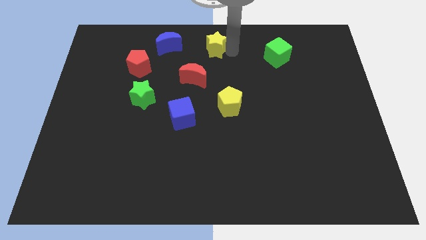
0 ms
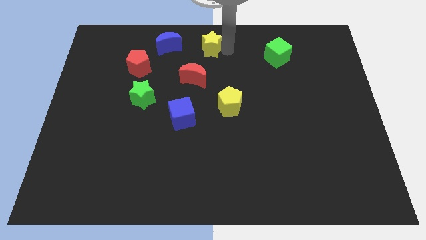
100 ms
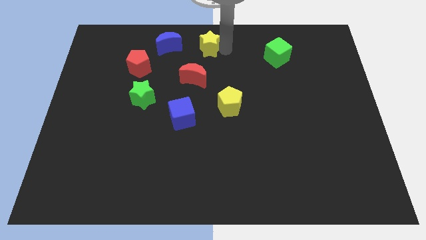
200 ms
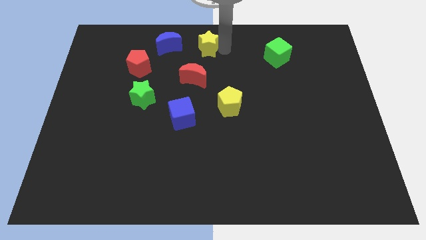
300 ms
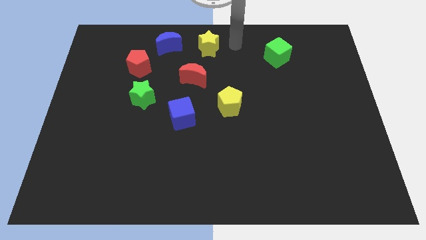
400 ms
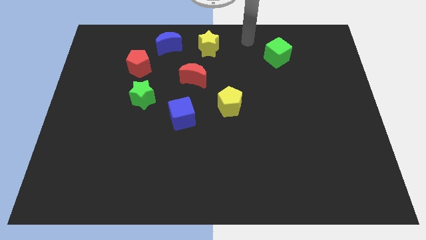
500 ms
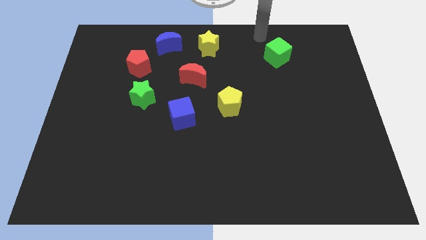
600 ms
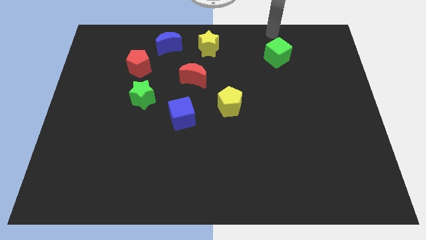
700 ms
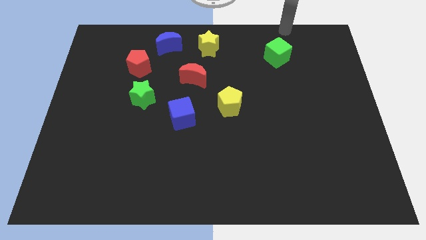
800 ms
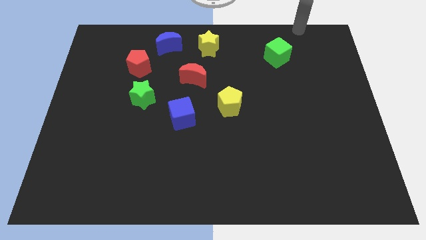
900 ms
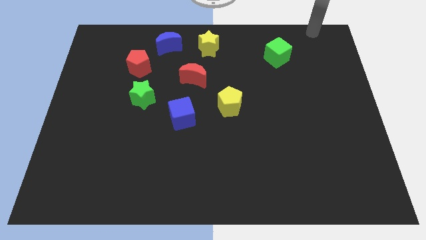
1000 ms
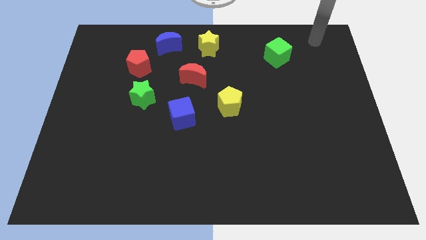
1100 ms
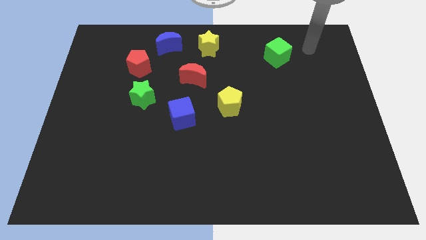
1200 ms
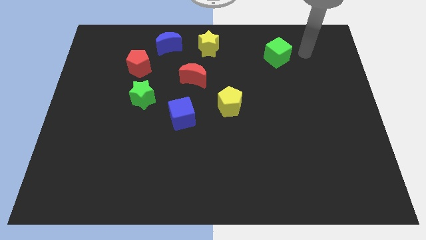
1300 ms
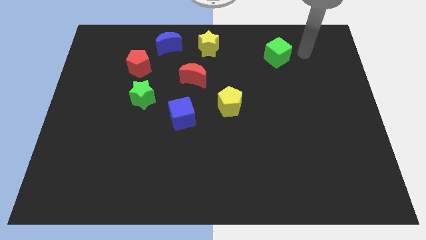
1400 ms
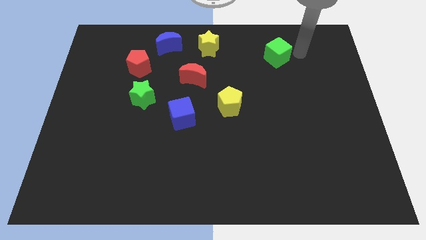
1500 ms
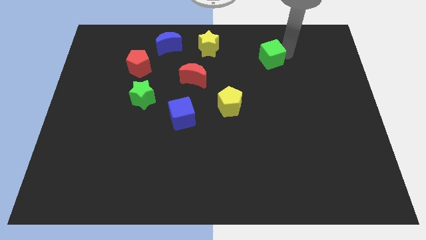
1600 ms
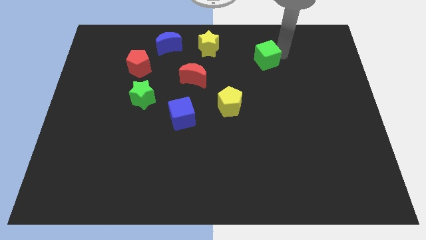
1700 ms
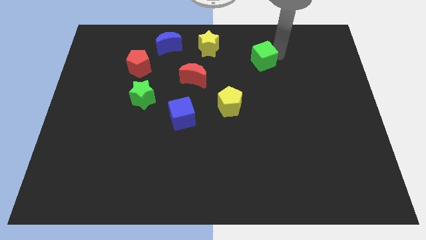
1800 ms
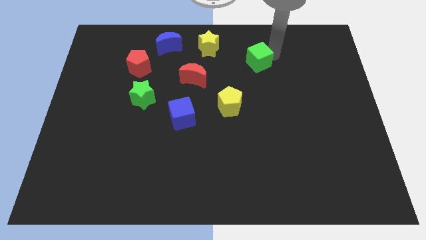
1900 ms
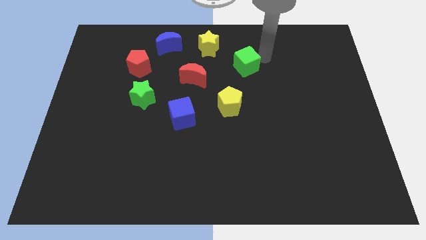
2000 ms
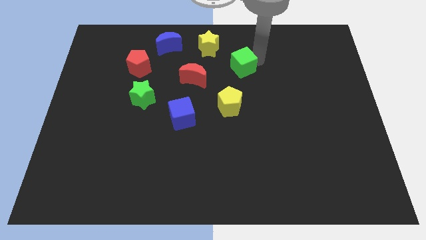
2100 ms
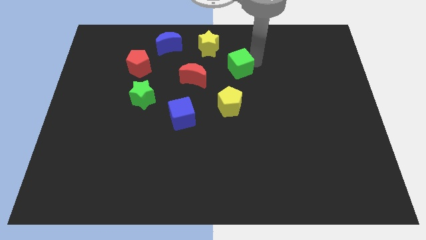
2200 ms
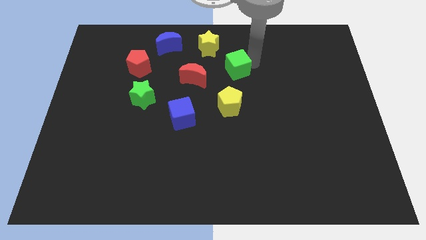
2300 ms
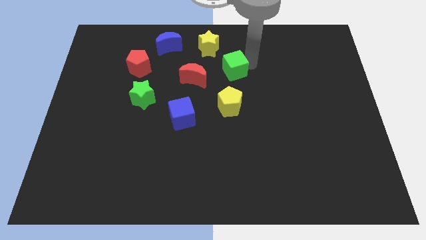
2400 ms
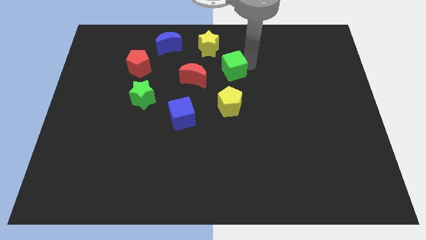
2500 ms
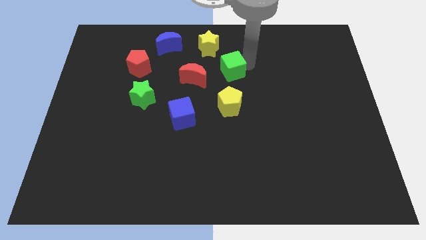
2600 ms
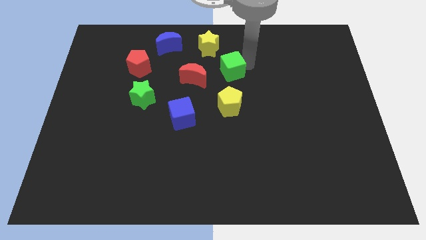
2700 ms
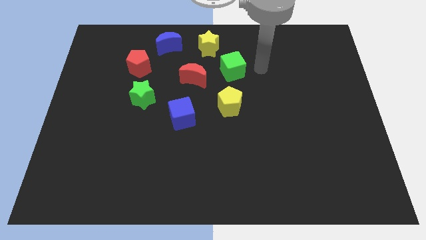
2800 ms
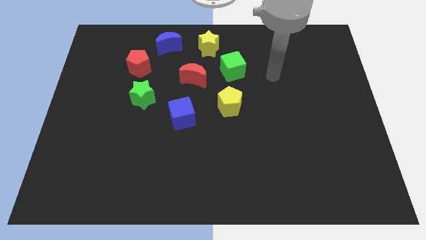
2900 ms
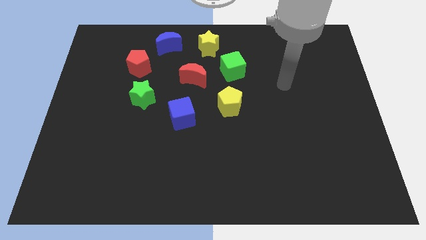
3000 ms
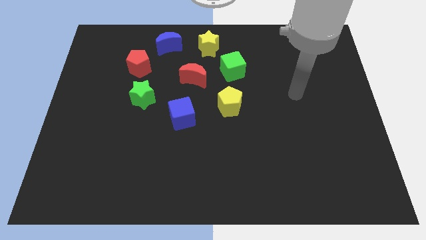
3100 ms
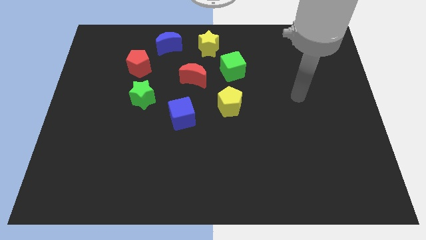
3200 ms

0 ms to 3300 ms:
move the green cube on top of the yellow pentangon

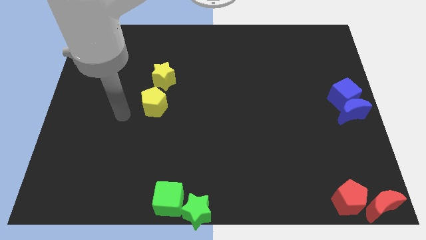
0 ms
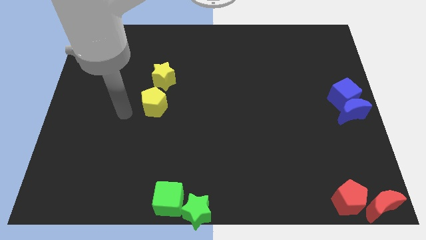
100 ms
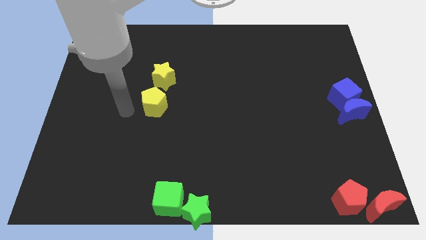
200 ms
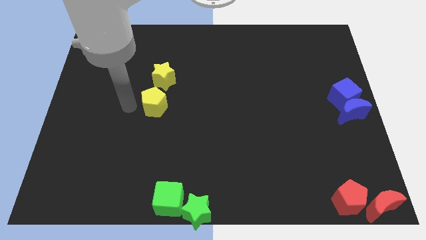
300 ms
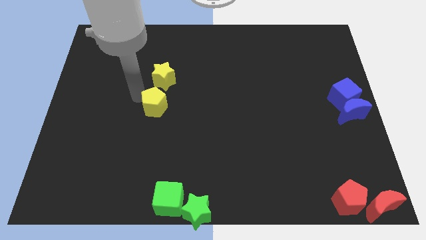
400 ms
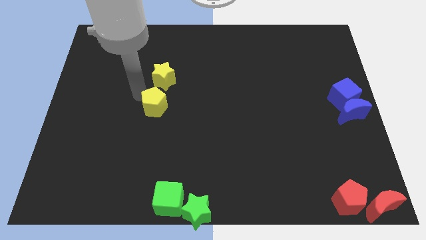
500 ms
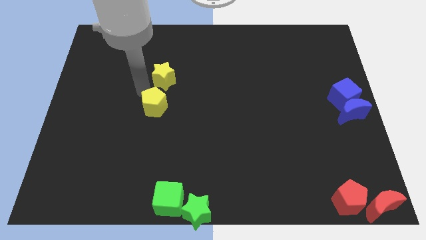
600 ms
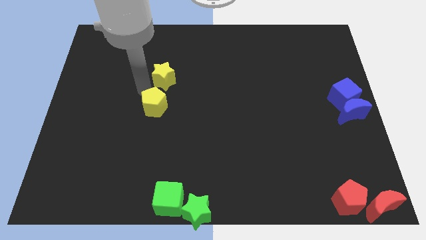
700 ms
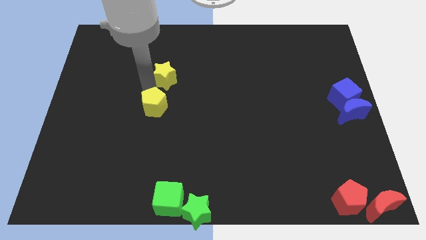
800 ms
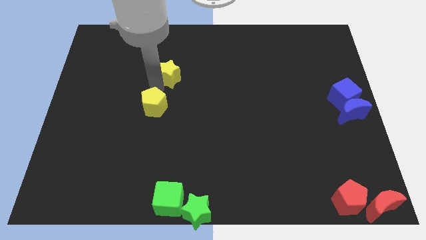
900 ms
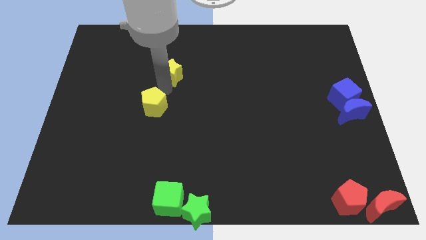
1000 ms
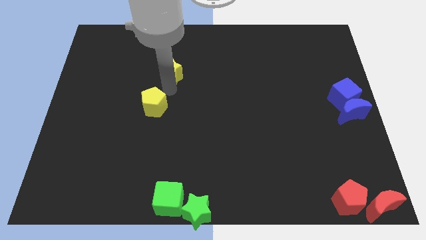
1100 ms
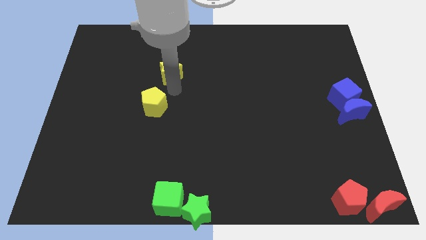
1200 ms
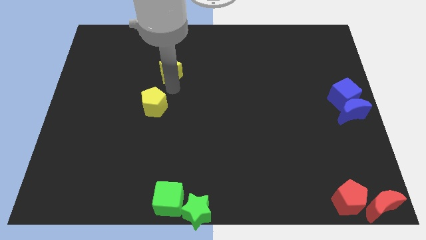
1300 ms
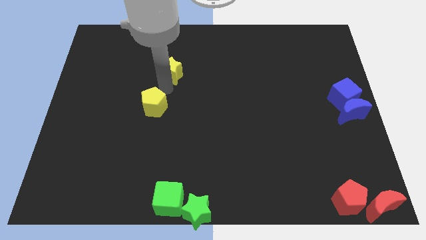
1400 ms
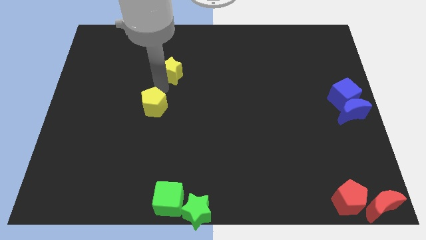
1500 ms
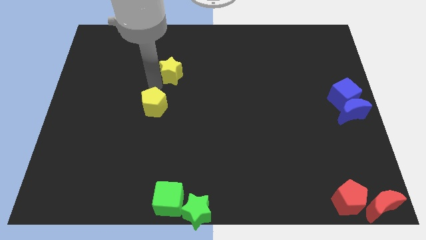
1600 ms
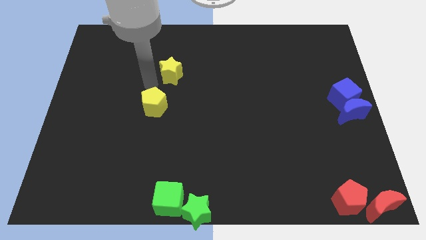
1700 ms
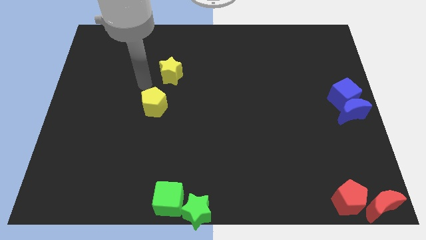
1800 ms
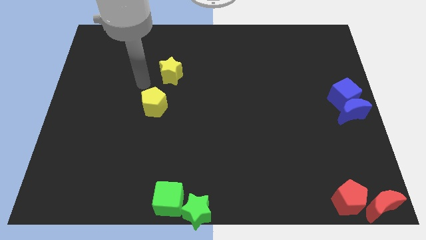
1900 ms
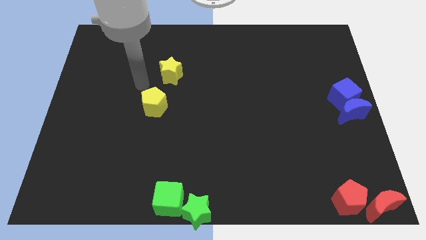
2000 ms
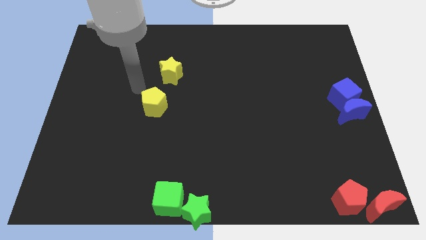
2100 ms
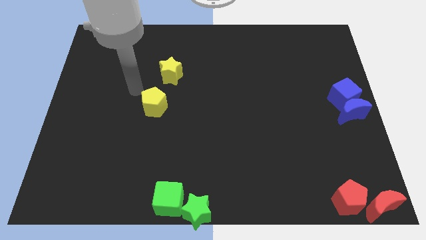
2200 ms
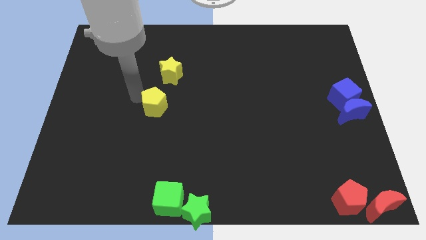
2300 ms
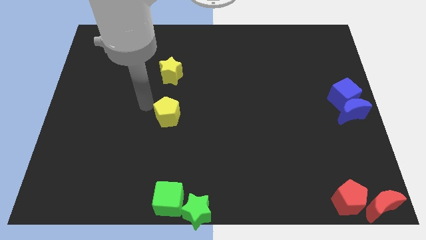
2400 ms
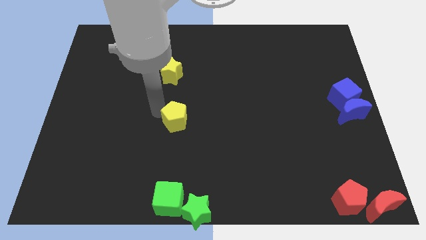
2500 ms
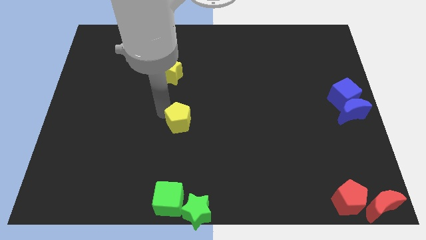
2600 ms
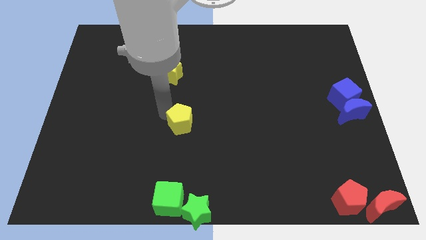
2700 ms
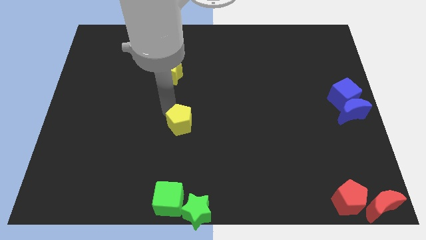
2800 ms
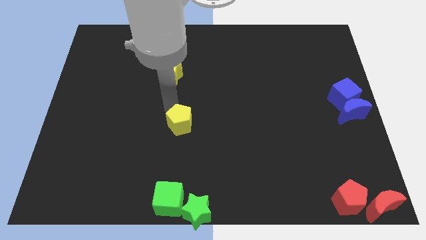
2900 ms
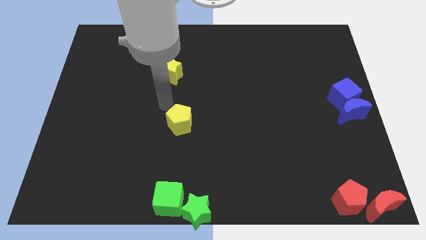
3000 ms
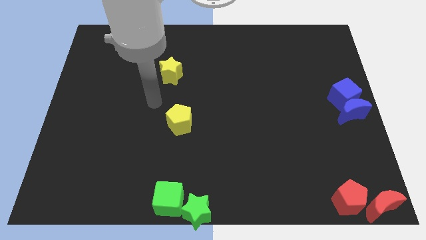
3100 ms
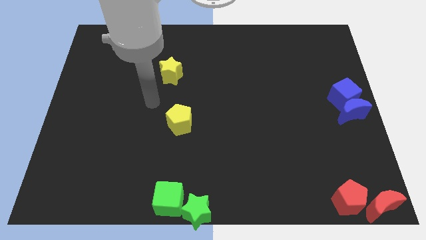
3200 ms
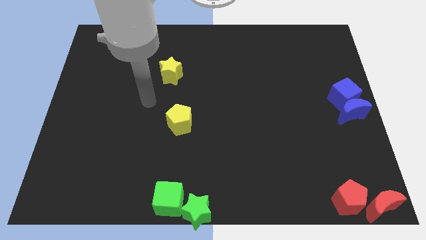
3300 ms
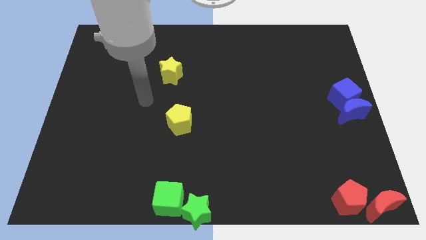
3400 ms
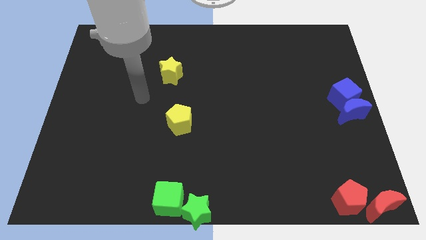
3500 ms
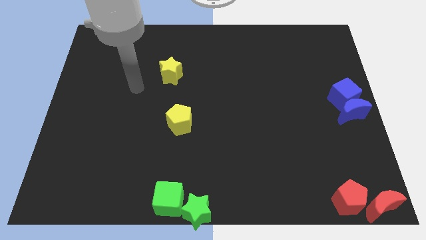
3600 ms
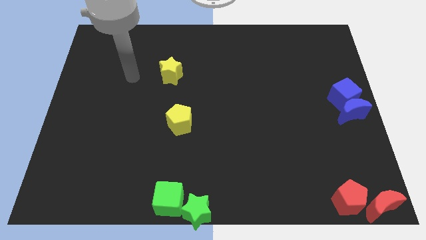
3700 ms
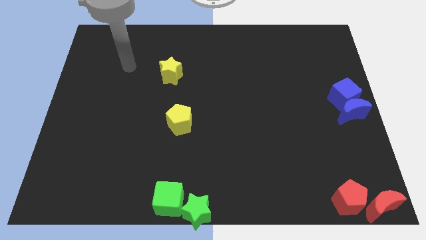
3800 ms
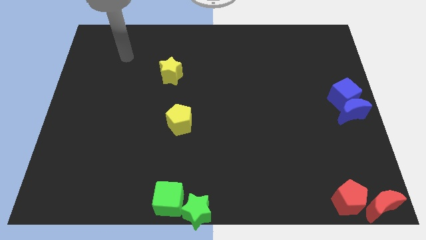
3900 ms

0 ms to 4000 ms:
slide the yellow star away from the yellow pentagon

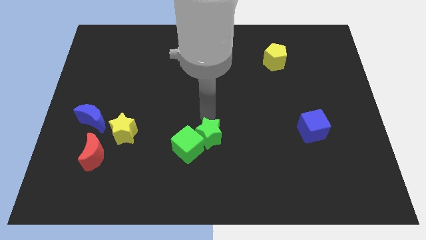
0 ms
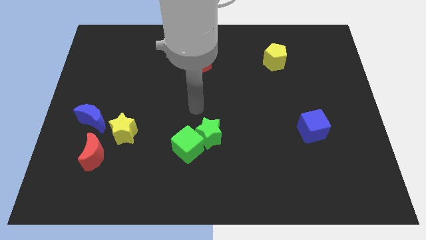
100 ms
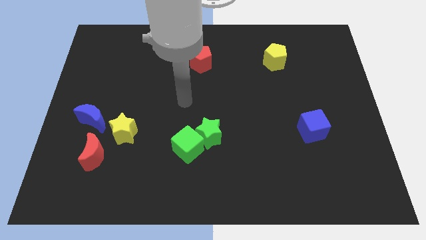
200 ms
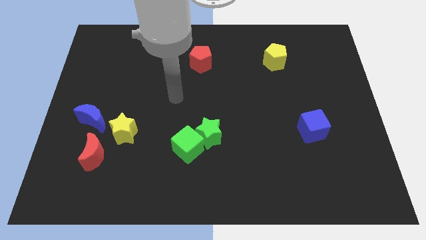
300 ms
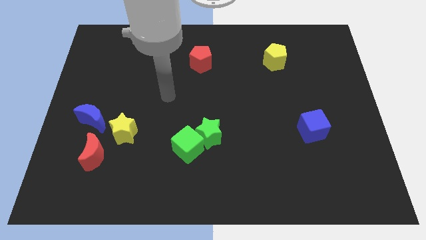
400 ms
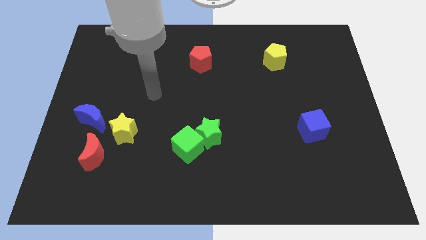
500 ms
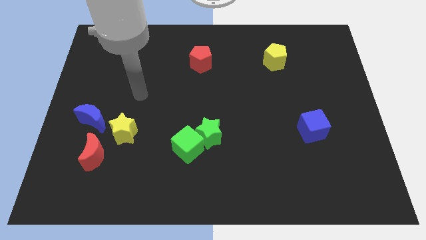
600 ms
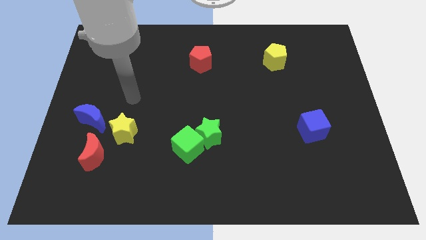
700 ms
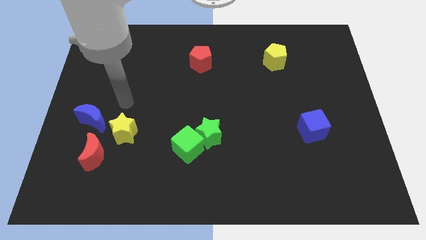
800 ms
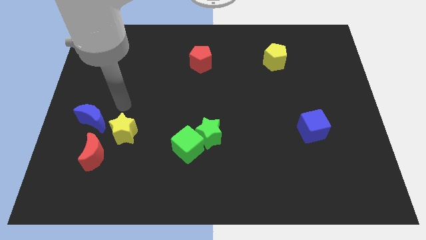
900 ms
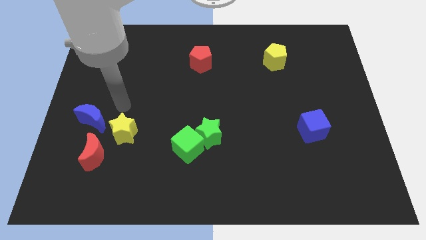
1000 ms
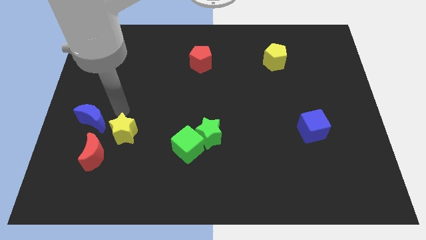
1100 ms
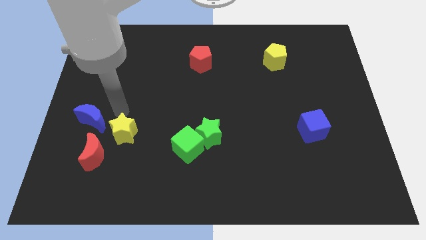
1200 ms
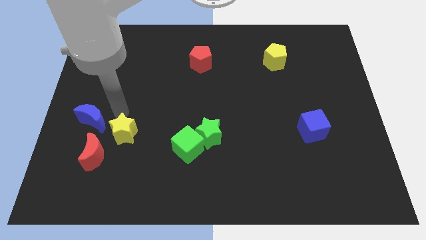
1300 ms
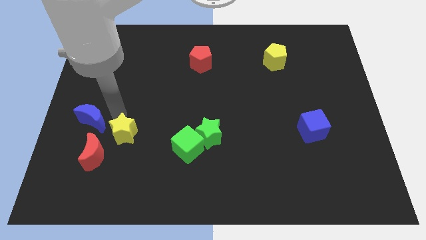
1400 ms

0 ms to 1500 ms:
point your arm towards yellow star

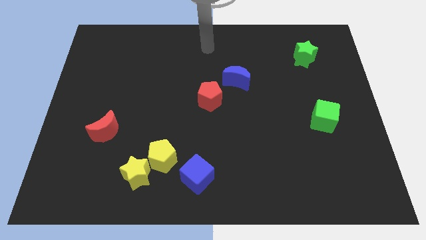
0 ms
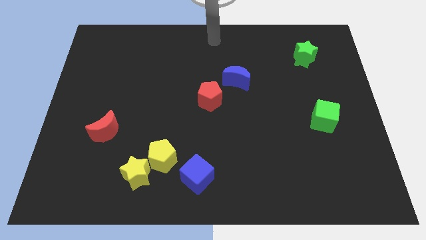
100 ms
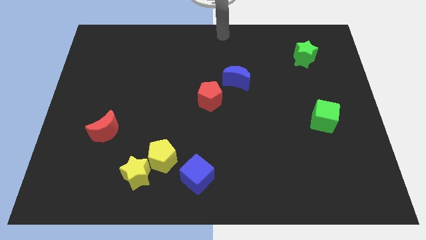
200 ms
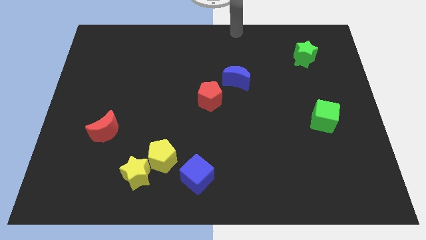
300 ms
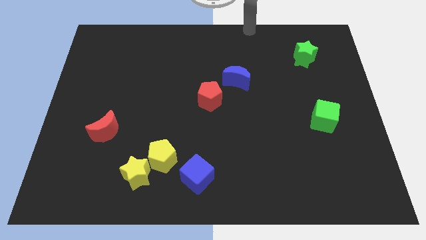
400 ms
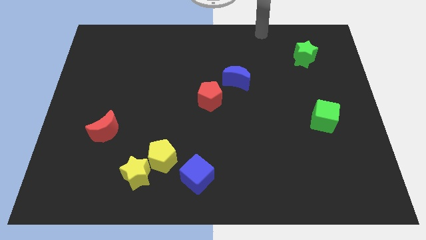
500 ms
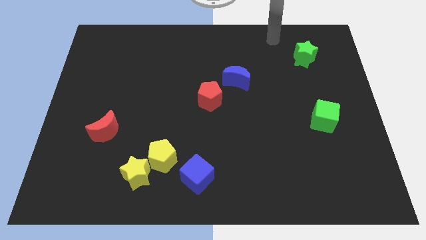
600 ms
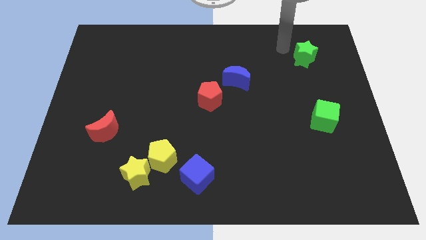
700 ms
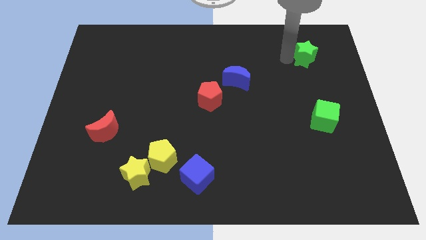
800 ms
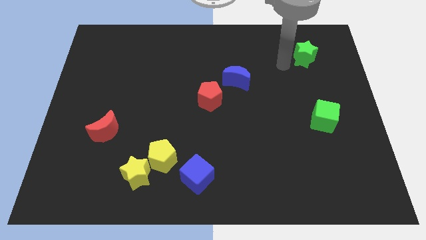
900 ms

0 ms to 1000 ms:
place your arm at the left of the green star
